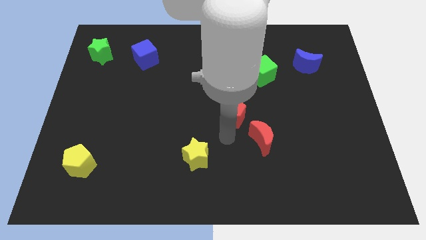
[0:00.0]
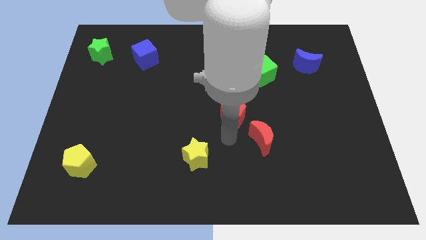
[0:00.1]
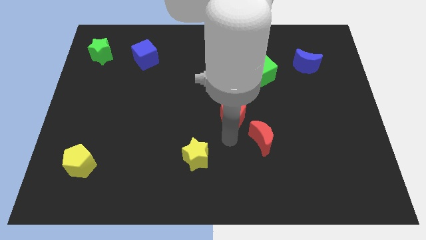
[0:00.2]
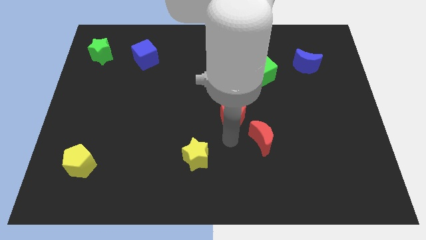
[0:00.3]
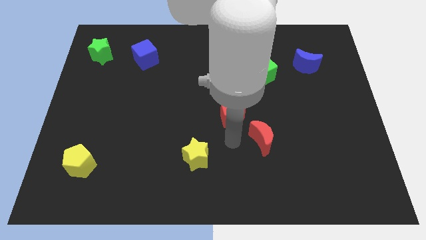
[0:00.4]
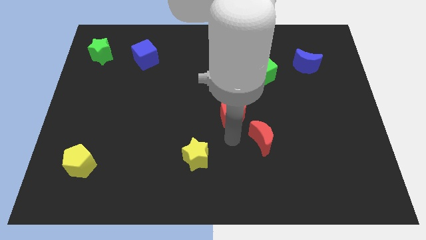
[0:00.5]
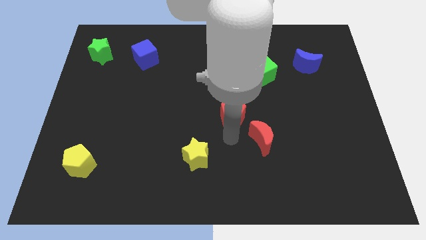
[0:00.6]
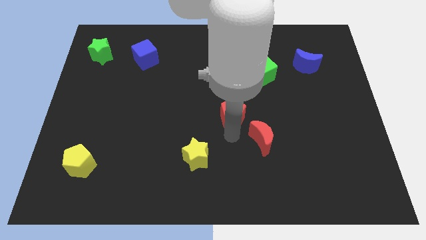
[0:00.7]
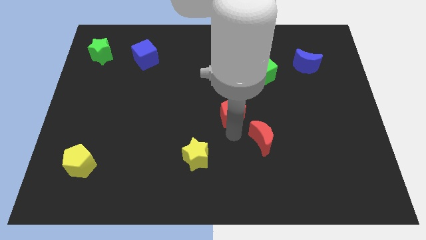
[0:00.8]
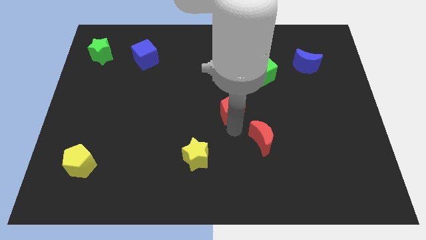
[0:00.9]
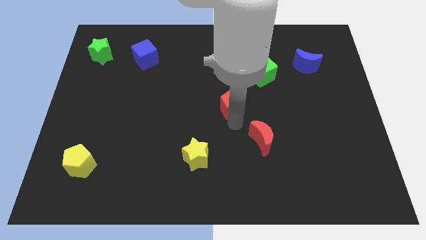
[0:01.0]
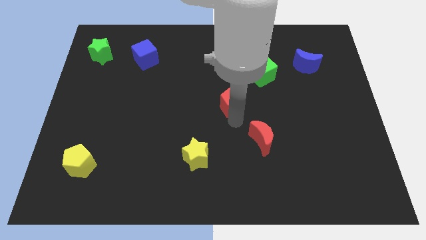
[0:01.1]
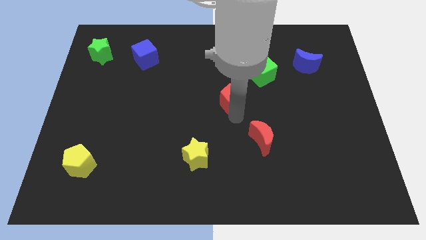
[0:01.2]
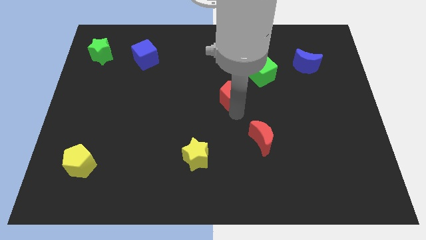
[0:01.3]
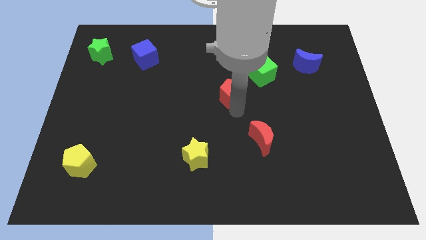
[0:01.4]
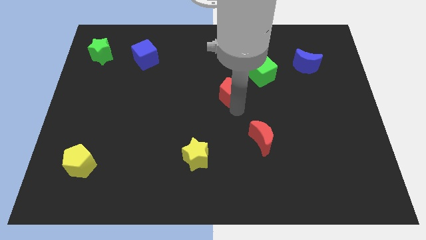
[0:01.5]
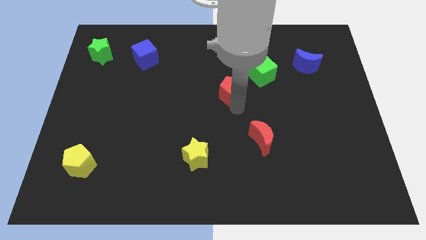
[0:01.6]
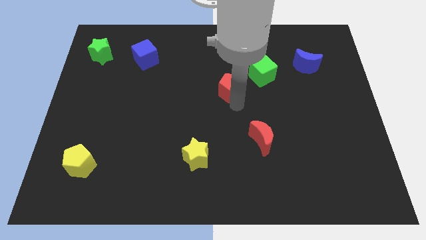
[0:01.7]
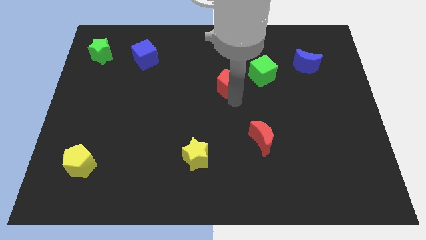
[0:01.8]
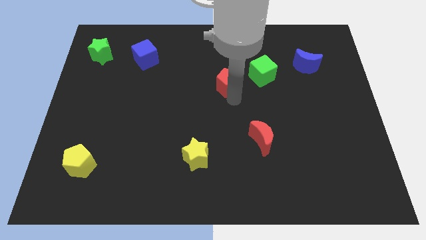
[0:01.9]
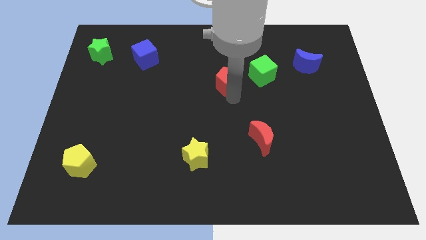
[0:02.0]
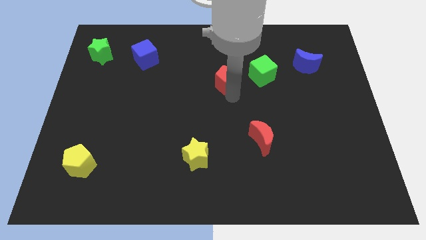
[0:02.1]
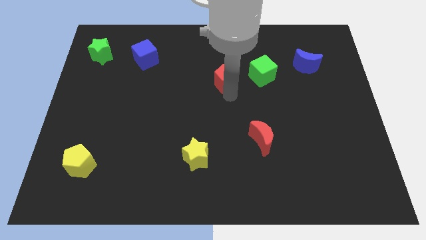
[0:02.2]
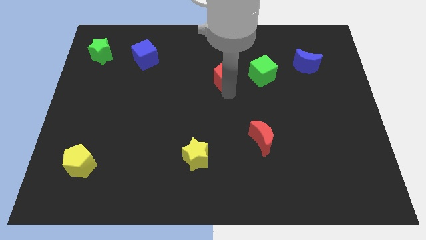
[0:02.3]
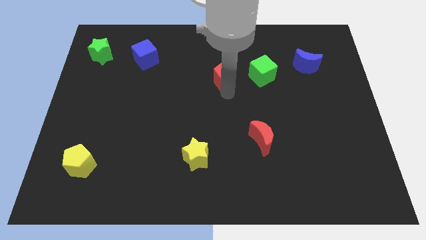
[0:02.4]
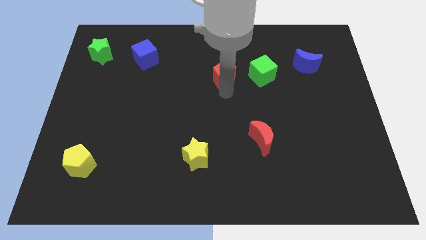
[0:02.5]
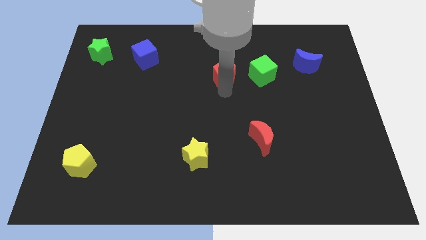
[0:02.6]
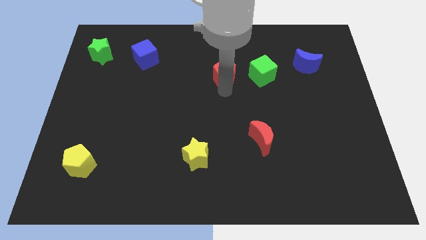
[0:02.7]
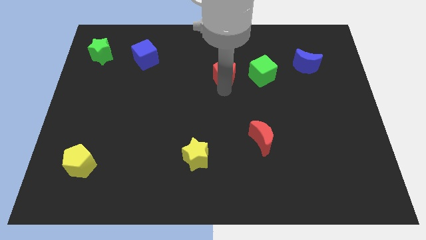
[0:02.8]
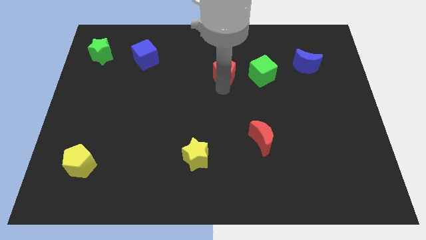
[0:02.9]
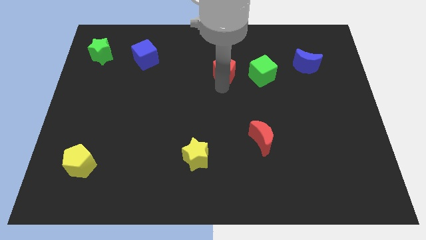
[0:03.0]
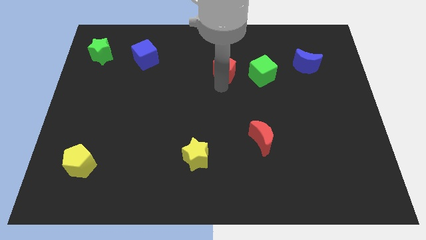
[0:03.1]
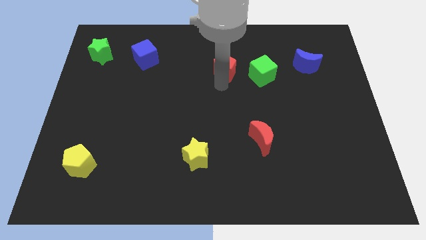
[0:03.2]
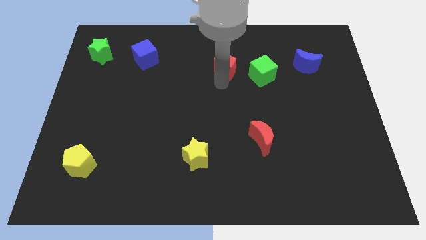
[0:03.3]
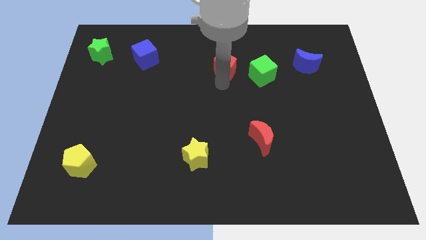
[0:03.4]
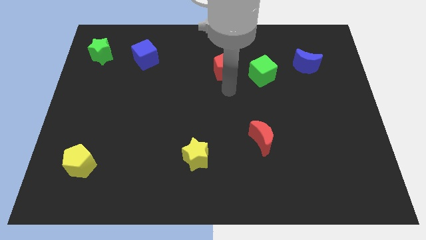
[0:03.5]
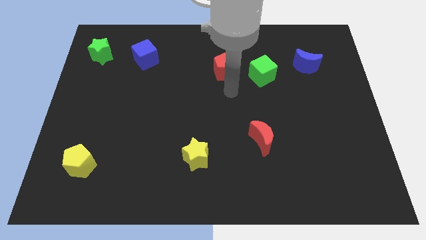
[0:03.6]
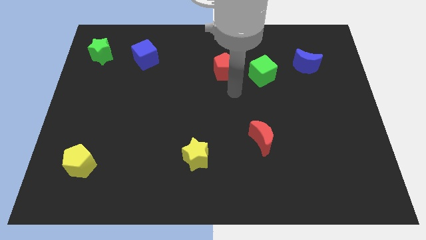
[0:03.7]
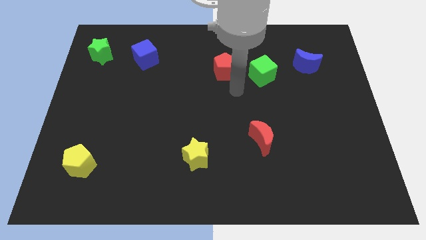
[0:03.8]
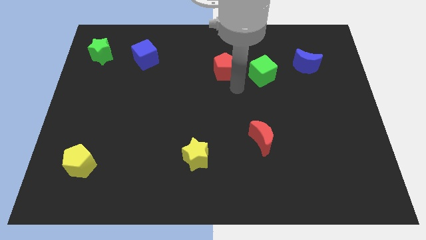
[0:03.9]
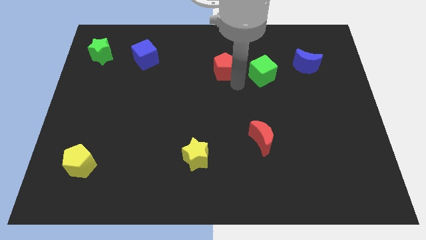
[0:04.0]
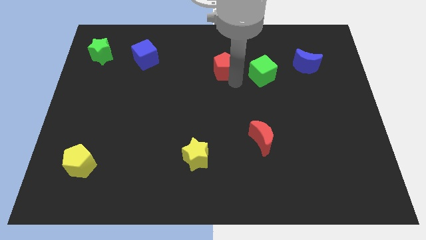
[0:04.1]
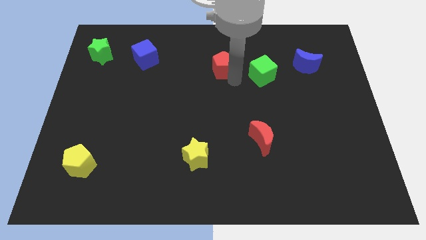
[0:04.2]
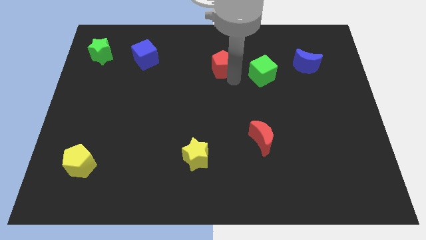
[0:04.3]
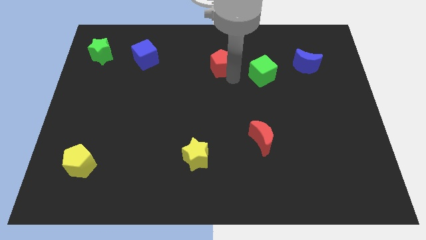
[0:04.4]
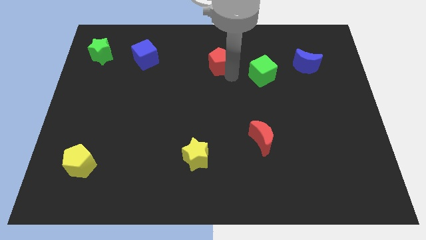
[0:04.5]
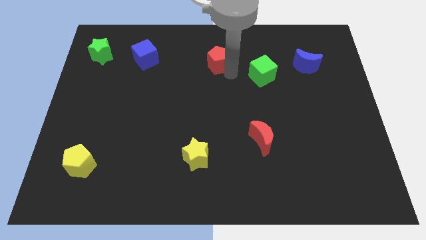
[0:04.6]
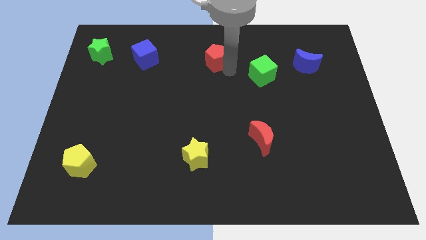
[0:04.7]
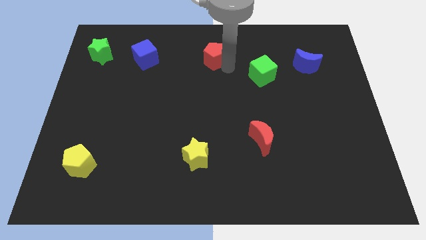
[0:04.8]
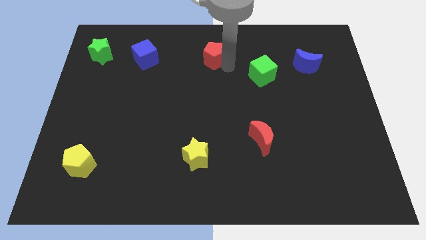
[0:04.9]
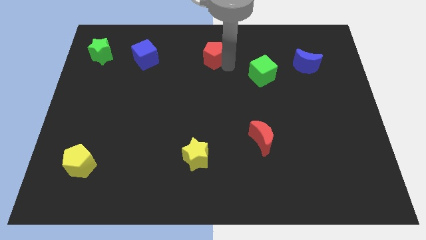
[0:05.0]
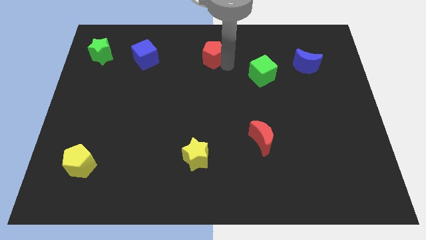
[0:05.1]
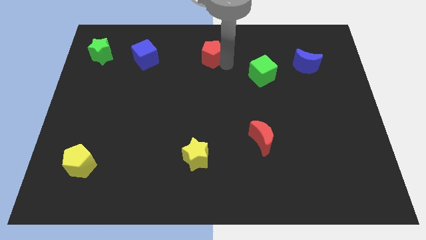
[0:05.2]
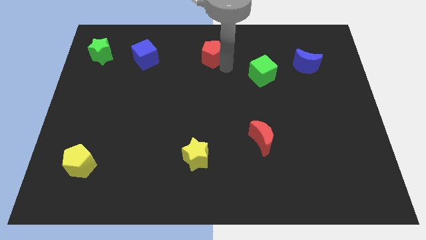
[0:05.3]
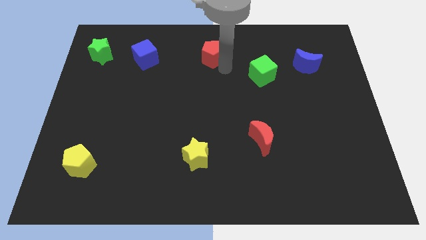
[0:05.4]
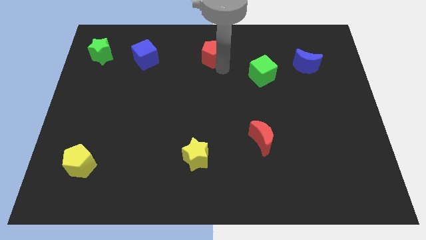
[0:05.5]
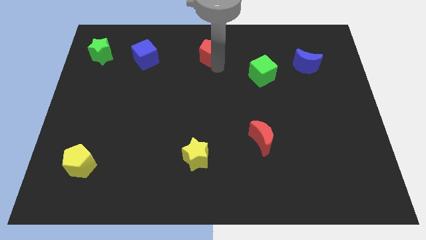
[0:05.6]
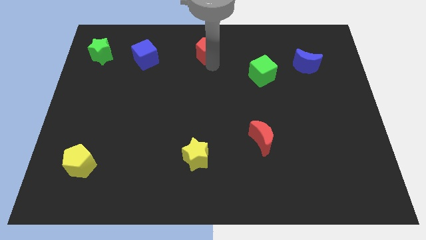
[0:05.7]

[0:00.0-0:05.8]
place the red pentagon left to the blue cube

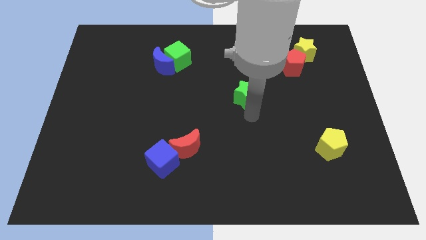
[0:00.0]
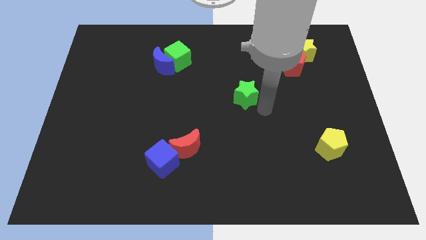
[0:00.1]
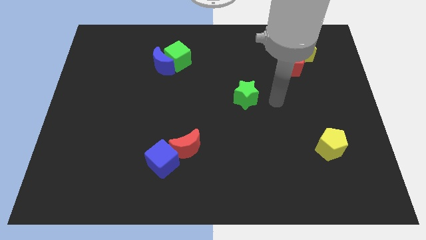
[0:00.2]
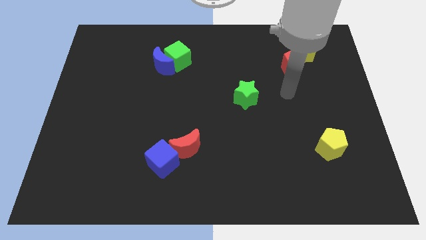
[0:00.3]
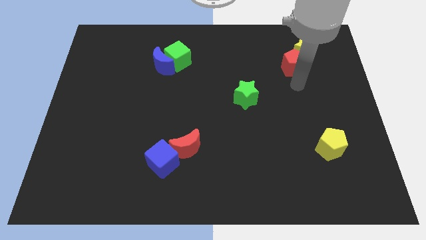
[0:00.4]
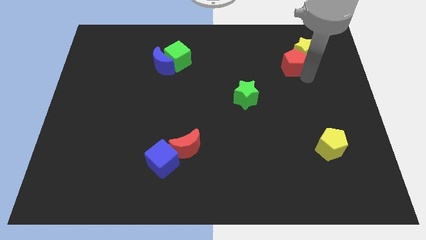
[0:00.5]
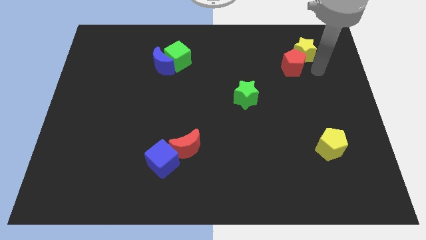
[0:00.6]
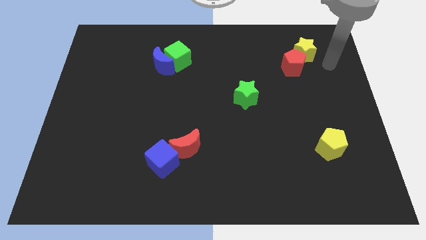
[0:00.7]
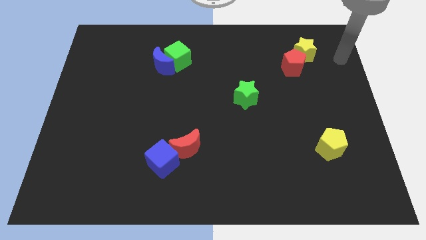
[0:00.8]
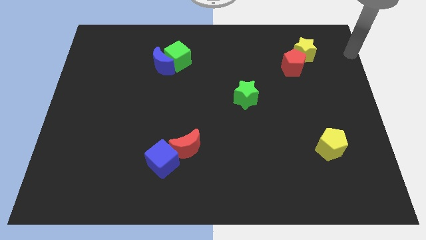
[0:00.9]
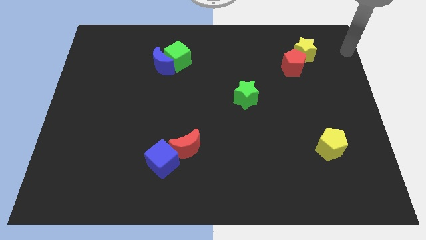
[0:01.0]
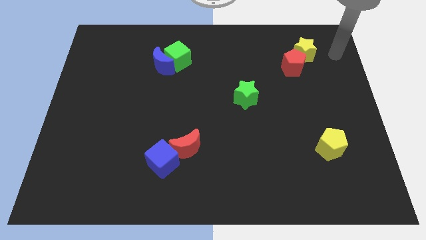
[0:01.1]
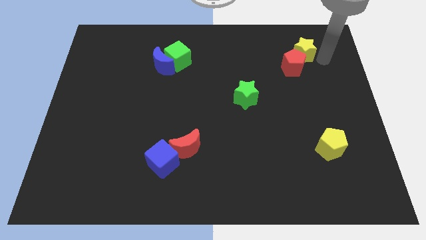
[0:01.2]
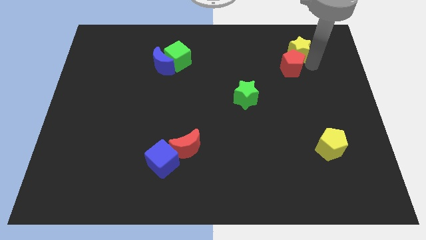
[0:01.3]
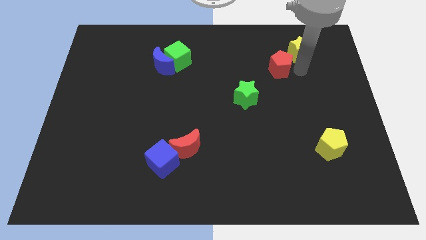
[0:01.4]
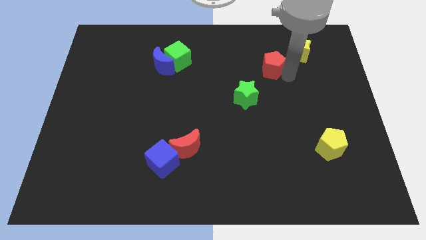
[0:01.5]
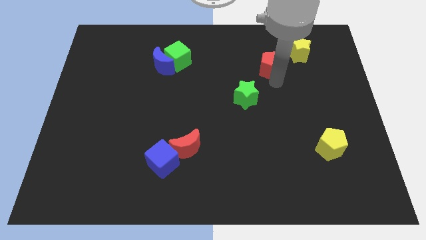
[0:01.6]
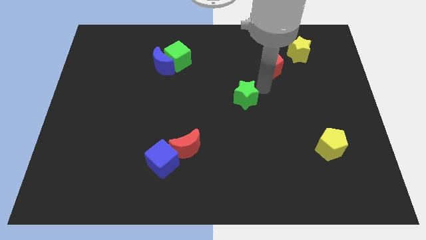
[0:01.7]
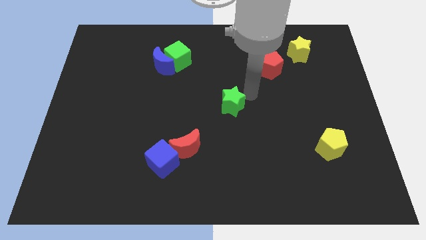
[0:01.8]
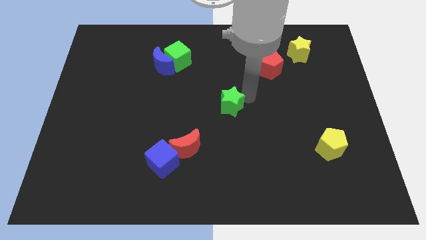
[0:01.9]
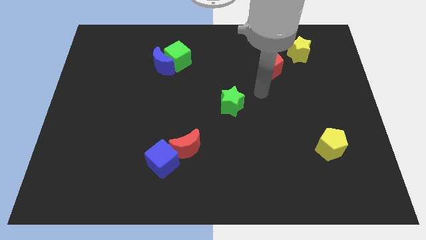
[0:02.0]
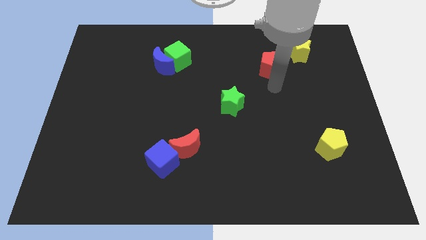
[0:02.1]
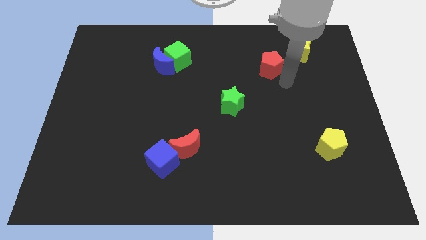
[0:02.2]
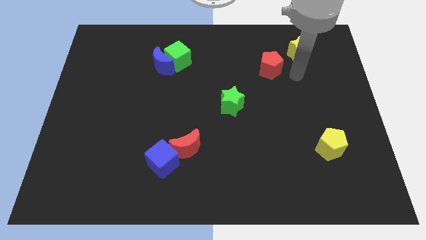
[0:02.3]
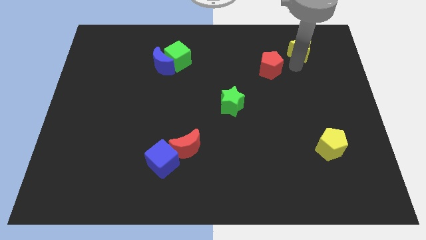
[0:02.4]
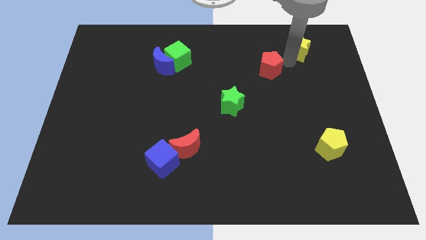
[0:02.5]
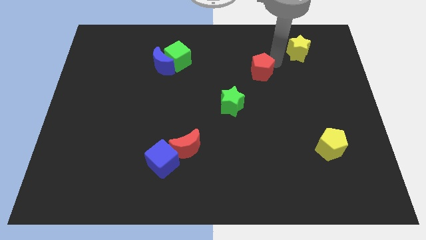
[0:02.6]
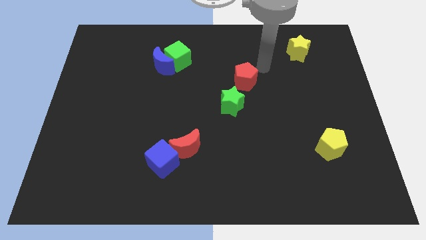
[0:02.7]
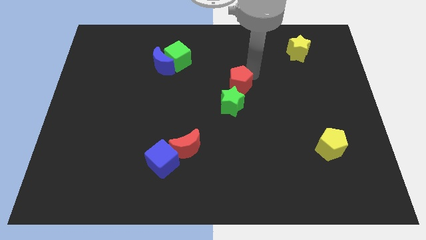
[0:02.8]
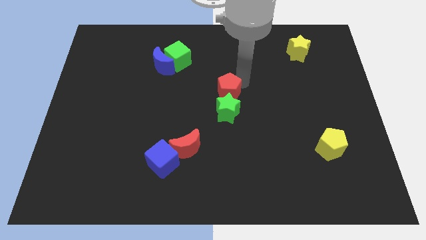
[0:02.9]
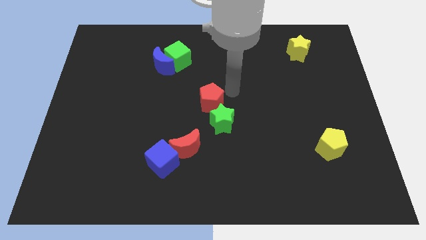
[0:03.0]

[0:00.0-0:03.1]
separate yellow star and the red pentagon
